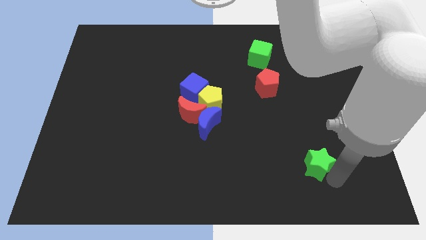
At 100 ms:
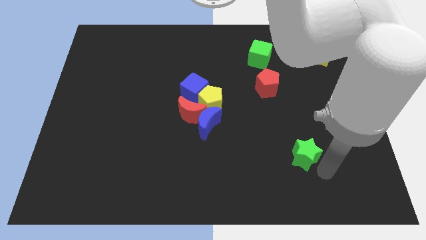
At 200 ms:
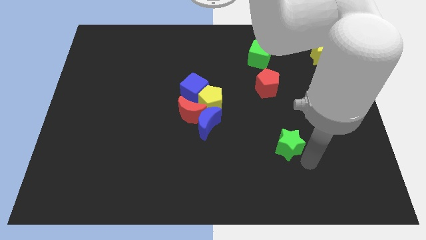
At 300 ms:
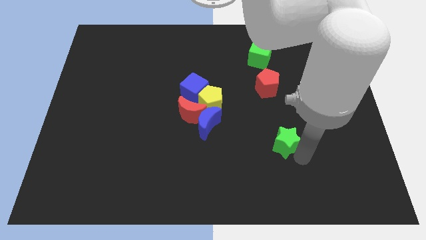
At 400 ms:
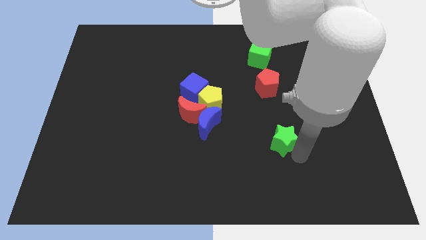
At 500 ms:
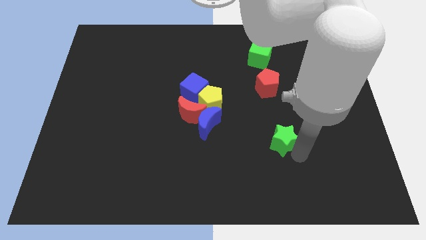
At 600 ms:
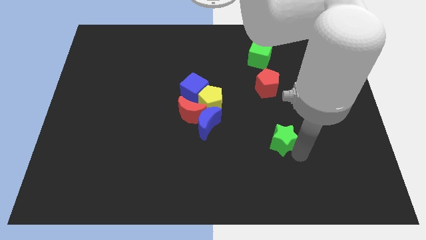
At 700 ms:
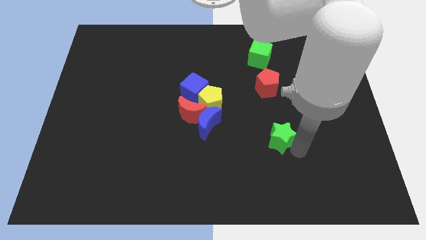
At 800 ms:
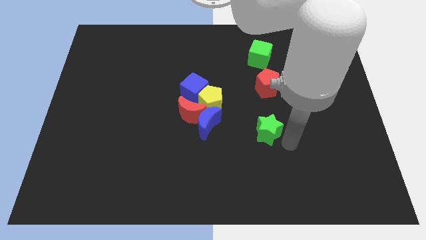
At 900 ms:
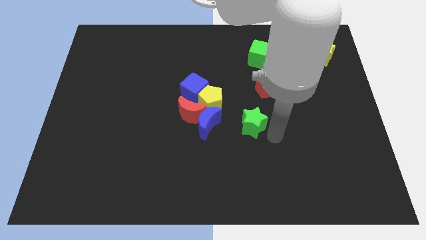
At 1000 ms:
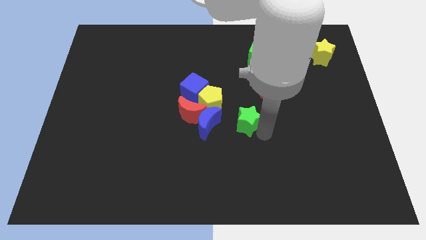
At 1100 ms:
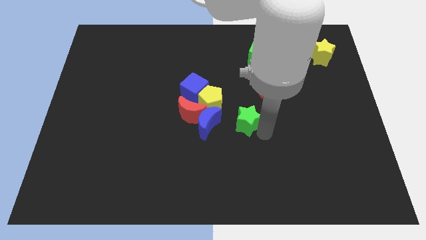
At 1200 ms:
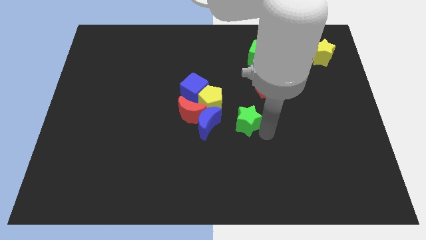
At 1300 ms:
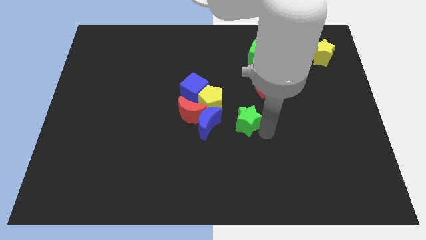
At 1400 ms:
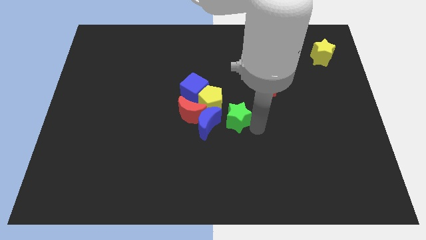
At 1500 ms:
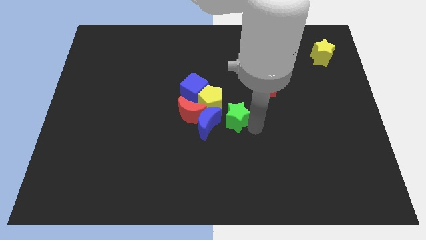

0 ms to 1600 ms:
move the green star close to the yellow pentagon

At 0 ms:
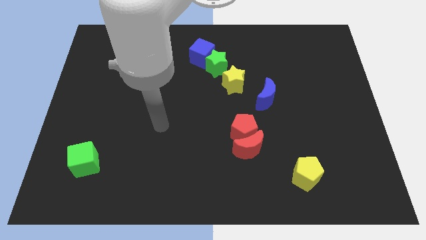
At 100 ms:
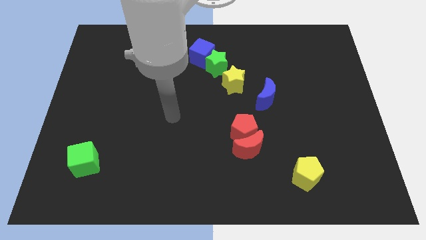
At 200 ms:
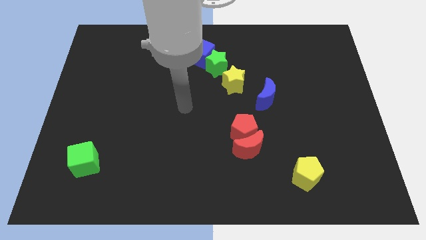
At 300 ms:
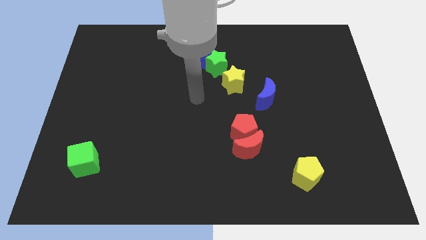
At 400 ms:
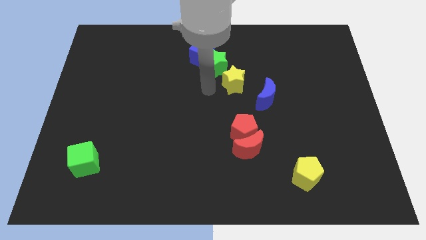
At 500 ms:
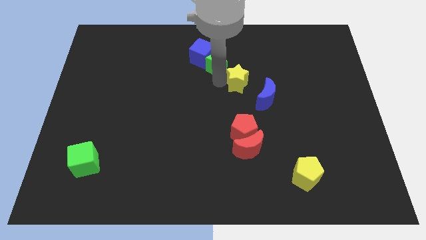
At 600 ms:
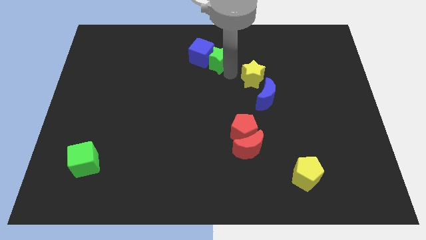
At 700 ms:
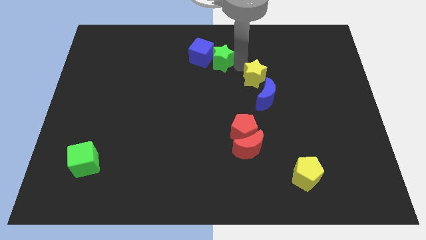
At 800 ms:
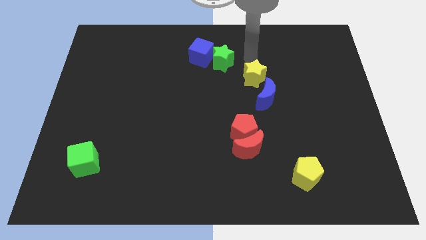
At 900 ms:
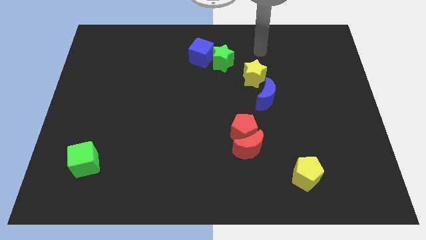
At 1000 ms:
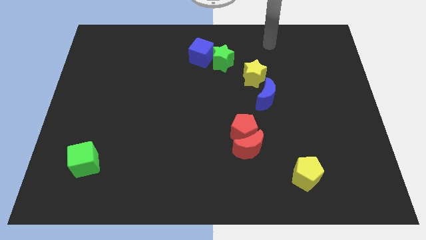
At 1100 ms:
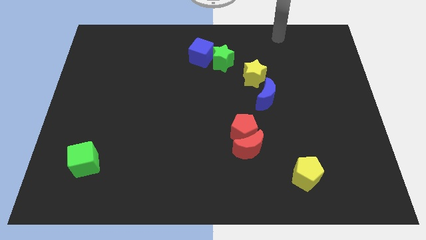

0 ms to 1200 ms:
move your arm to the top side of the board

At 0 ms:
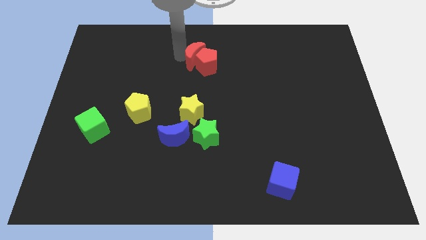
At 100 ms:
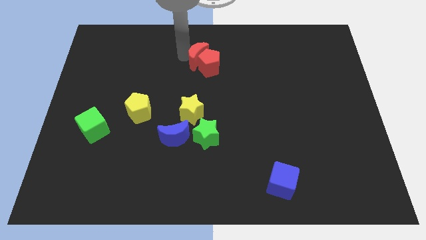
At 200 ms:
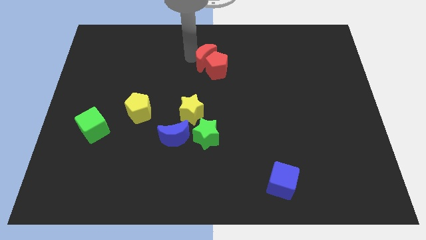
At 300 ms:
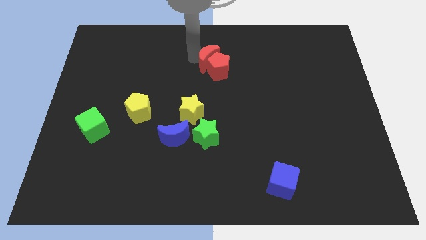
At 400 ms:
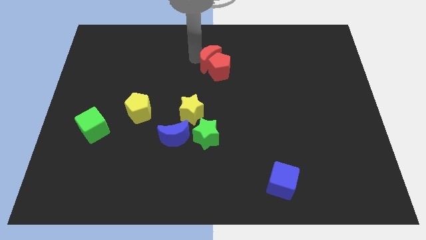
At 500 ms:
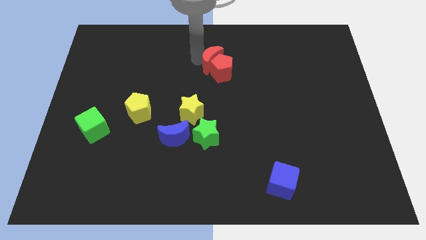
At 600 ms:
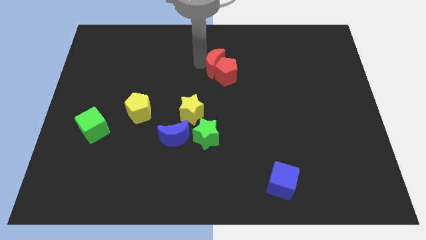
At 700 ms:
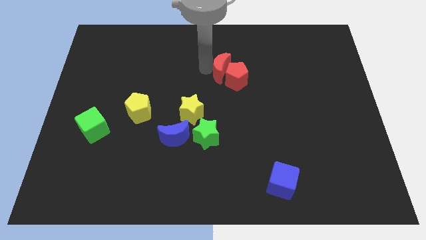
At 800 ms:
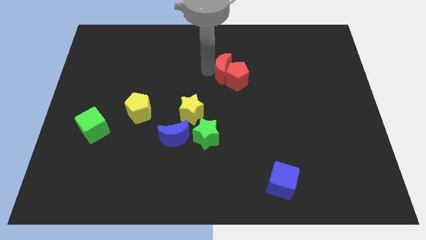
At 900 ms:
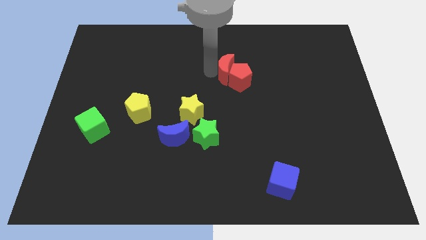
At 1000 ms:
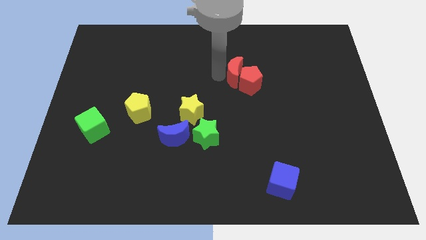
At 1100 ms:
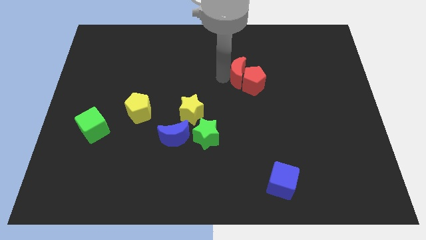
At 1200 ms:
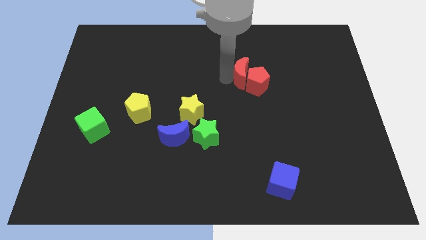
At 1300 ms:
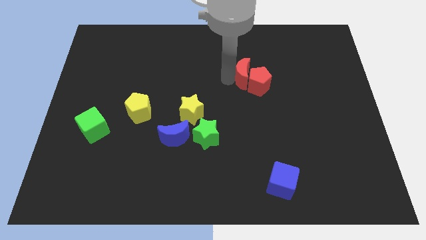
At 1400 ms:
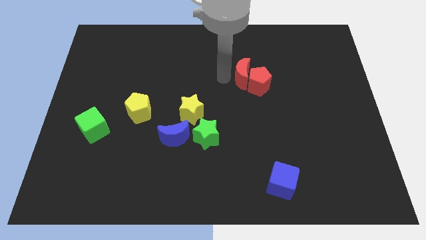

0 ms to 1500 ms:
push red moon and red pentagon towards the right side of the board

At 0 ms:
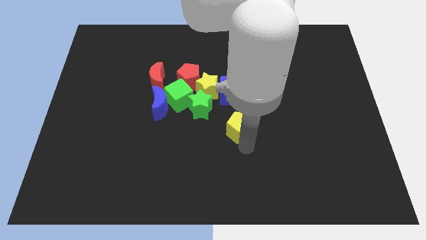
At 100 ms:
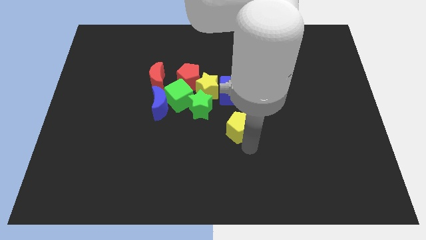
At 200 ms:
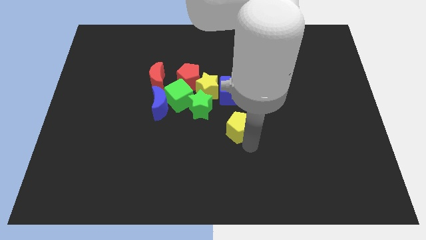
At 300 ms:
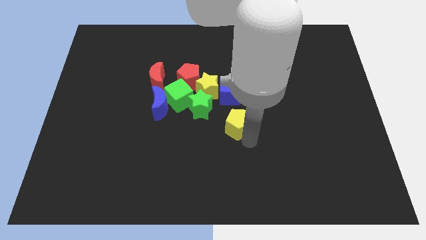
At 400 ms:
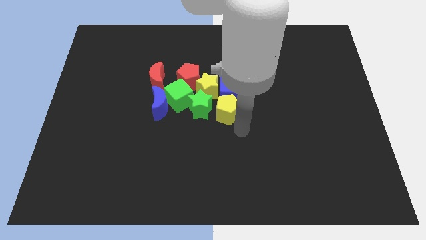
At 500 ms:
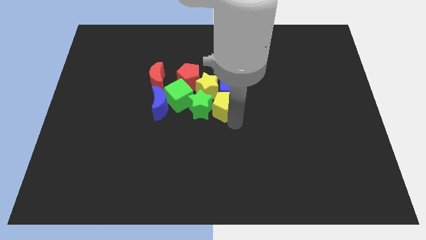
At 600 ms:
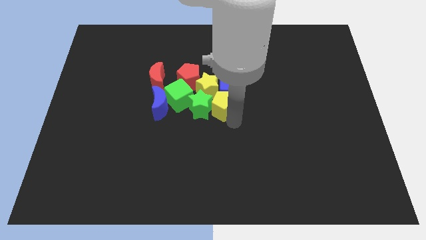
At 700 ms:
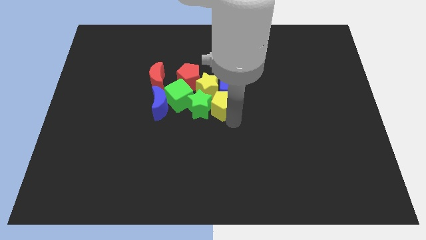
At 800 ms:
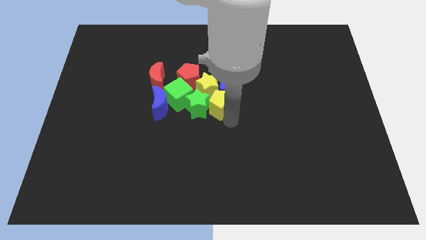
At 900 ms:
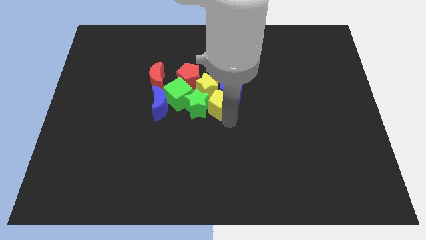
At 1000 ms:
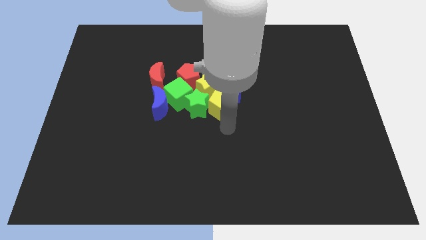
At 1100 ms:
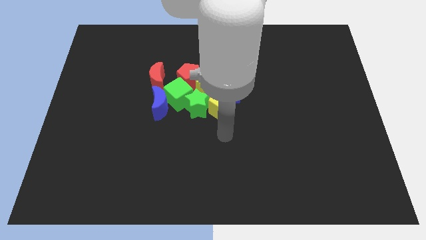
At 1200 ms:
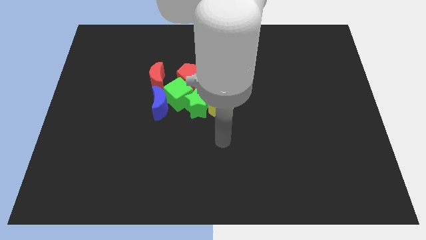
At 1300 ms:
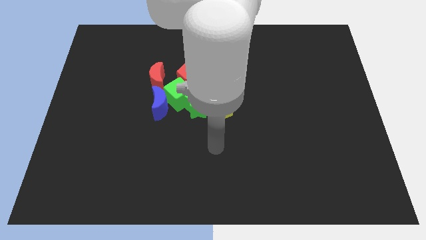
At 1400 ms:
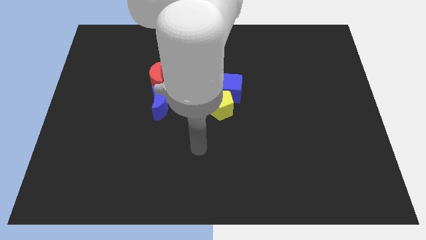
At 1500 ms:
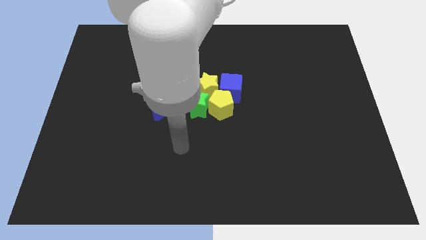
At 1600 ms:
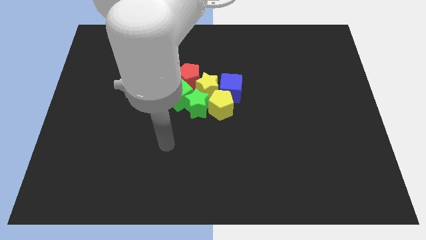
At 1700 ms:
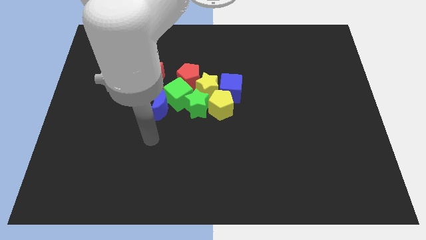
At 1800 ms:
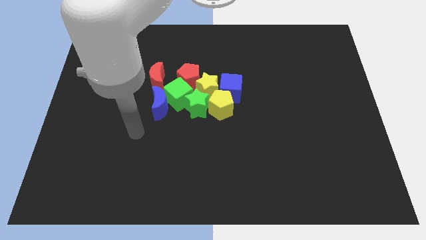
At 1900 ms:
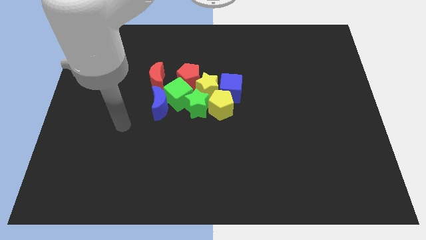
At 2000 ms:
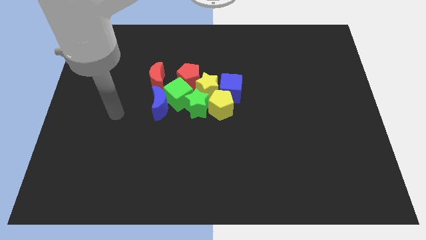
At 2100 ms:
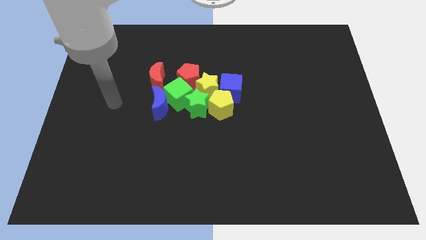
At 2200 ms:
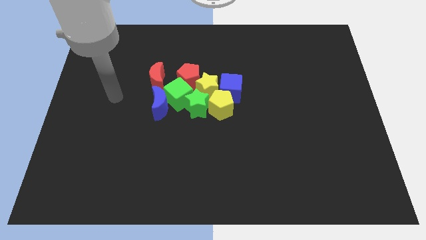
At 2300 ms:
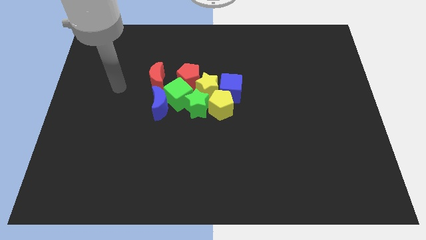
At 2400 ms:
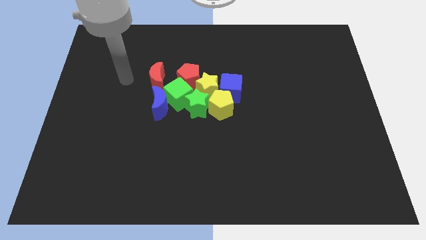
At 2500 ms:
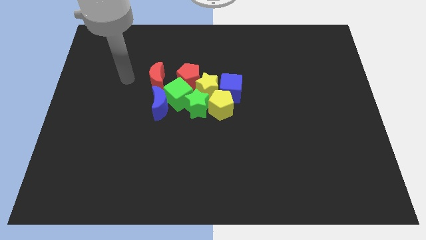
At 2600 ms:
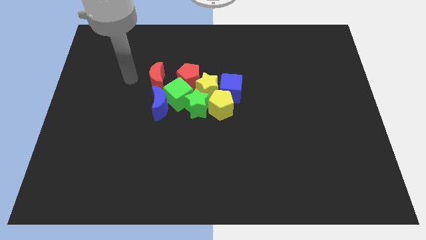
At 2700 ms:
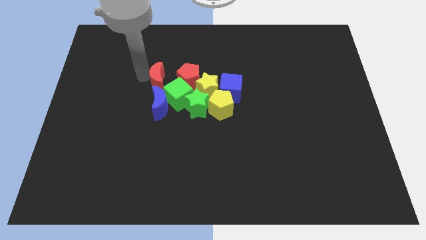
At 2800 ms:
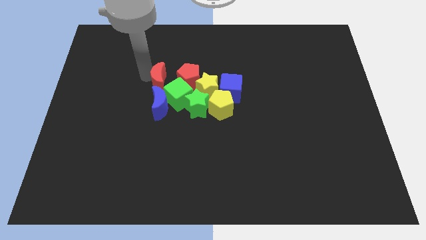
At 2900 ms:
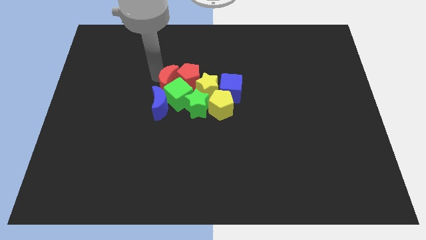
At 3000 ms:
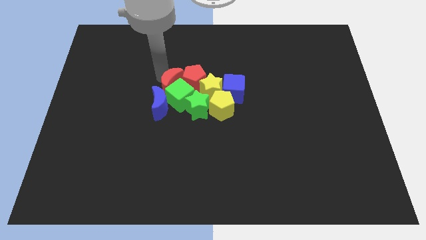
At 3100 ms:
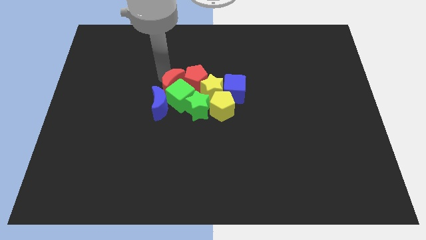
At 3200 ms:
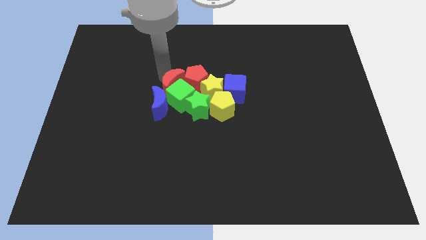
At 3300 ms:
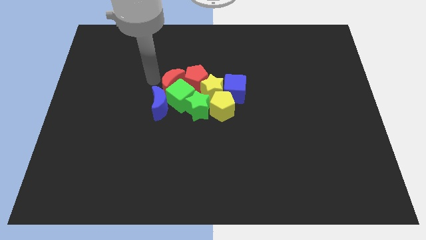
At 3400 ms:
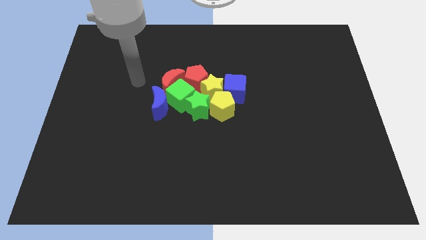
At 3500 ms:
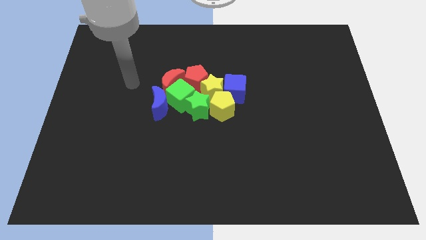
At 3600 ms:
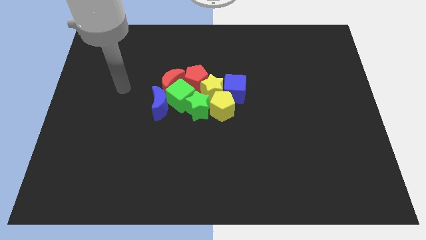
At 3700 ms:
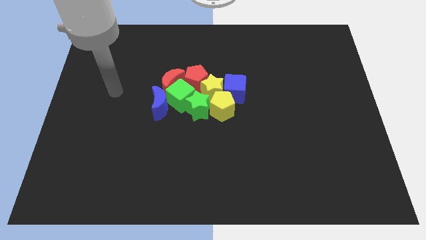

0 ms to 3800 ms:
push the yellow pentagon and red moon into the group of blocks

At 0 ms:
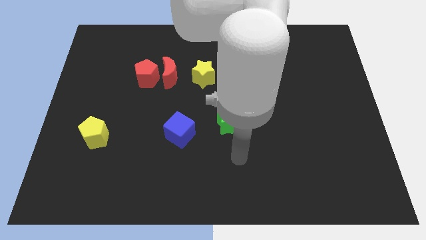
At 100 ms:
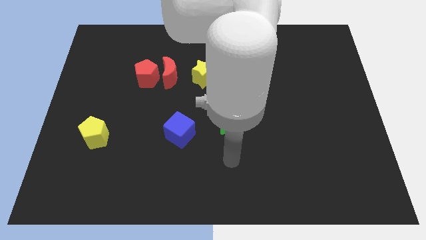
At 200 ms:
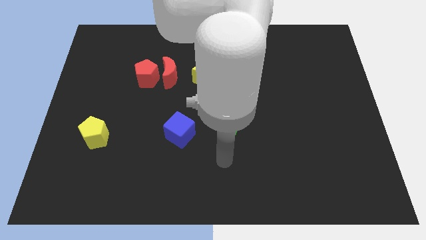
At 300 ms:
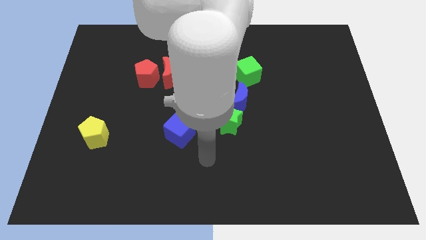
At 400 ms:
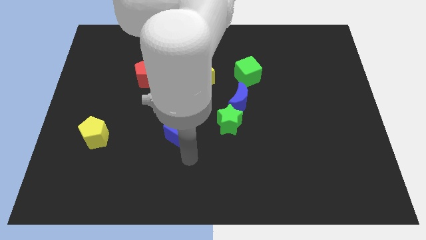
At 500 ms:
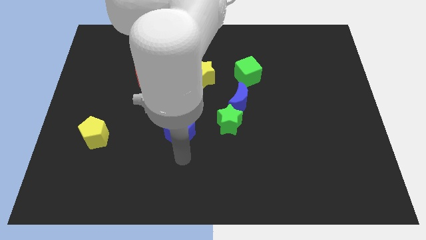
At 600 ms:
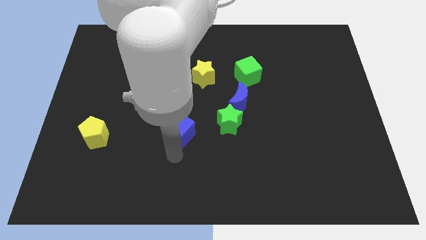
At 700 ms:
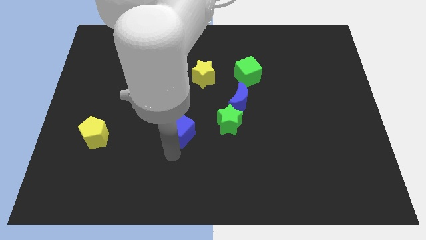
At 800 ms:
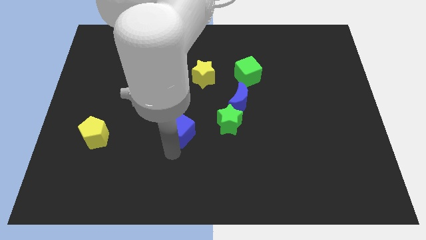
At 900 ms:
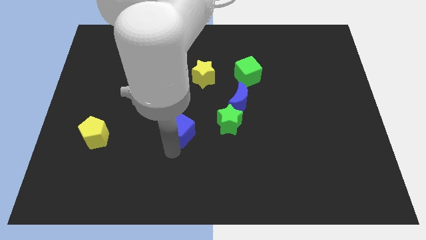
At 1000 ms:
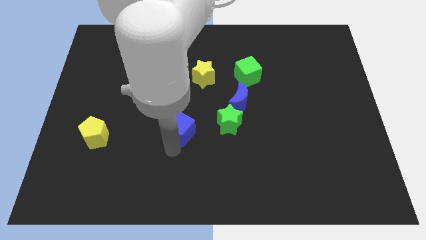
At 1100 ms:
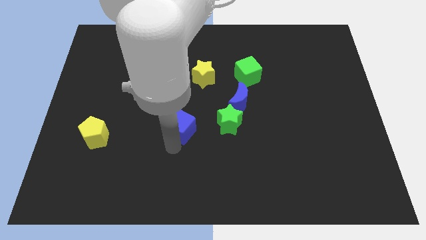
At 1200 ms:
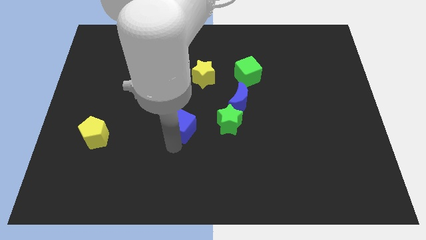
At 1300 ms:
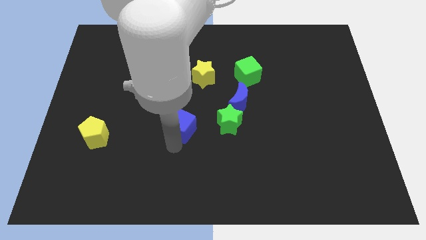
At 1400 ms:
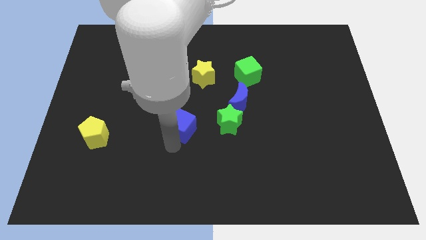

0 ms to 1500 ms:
place the blue cube in between the green star and the yellow pentagon
